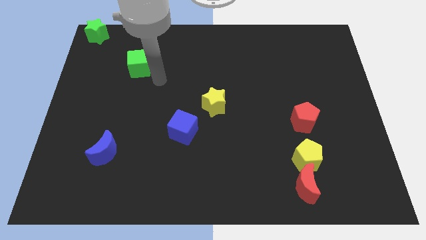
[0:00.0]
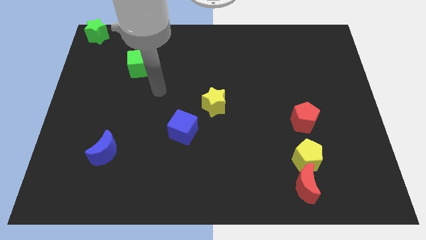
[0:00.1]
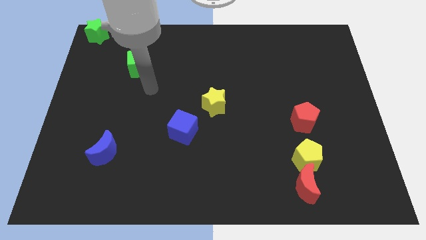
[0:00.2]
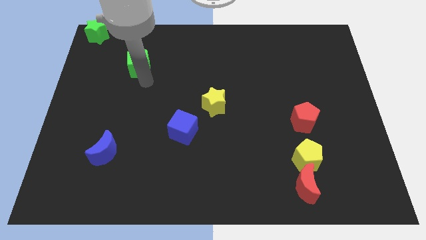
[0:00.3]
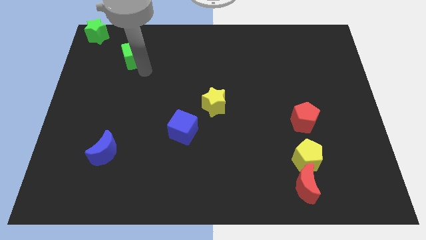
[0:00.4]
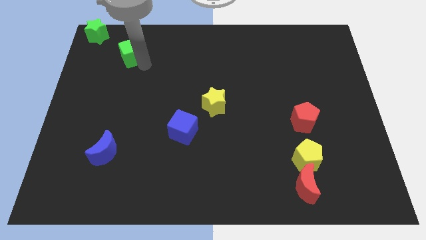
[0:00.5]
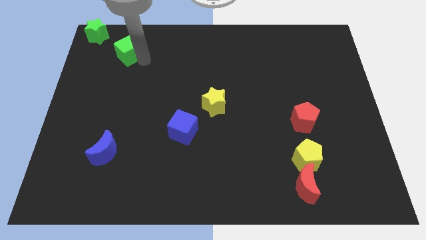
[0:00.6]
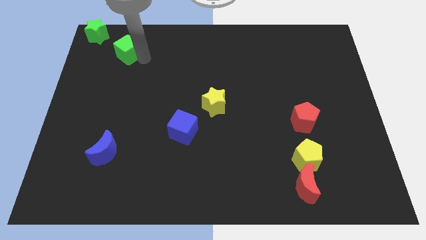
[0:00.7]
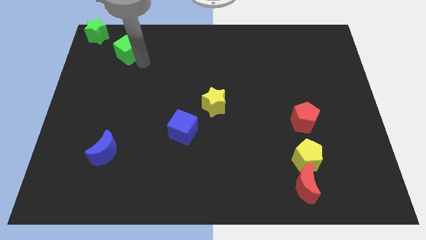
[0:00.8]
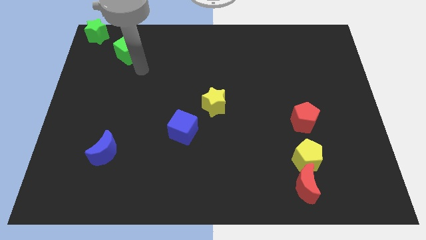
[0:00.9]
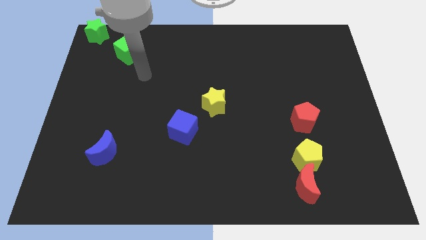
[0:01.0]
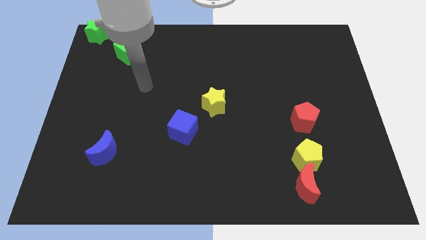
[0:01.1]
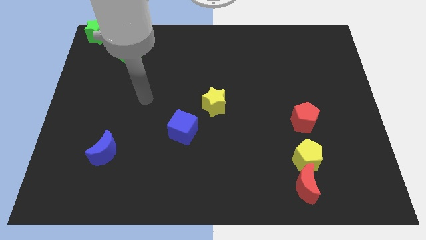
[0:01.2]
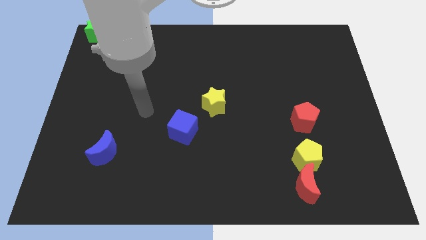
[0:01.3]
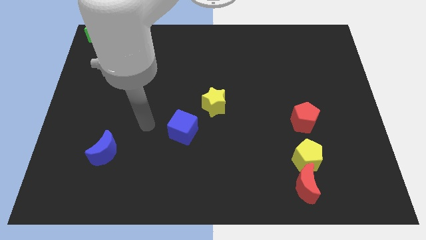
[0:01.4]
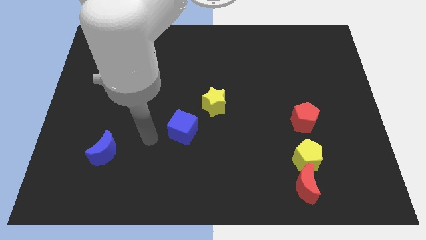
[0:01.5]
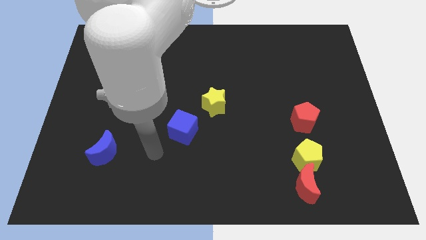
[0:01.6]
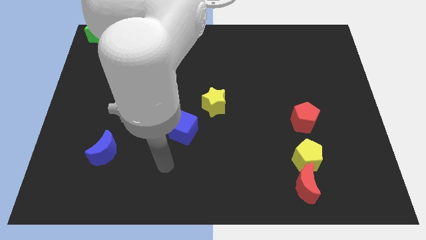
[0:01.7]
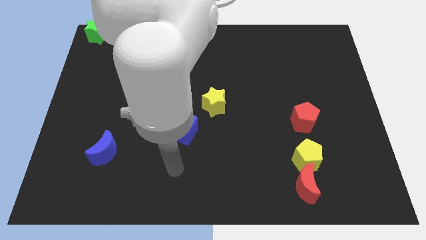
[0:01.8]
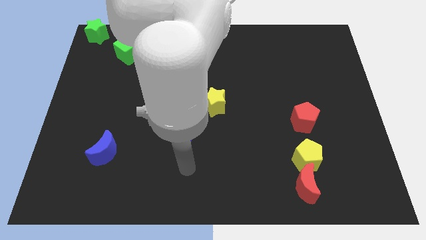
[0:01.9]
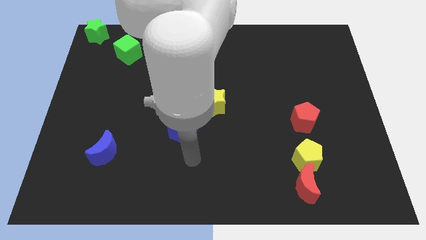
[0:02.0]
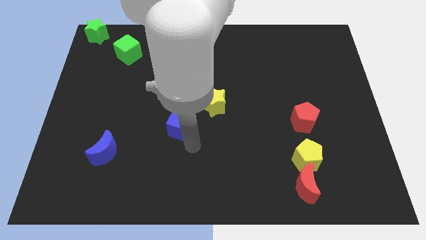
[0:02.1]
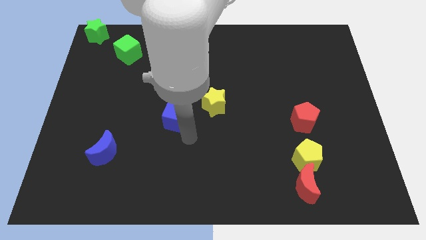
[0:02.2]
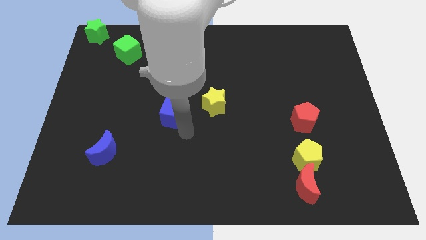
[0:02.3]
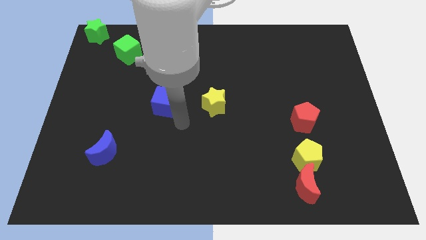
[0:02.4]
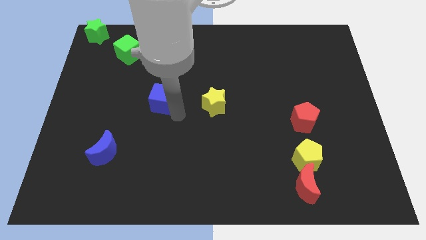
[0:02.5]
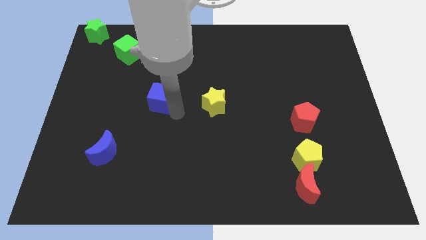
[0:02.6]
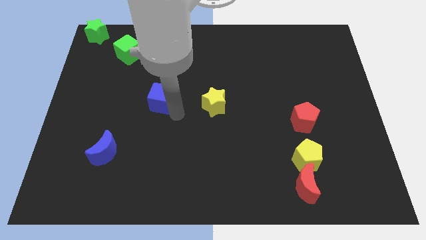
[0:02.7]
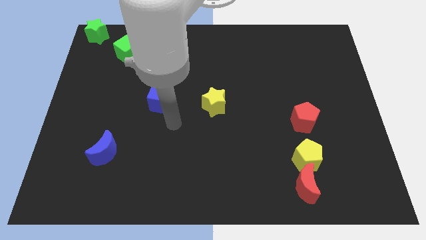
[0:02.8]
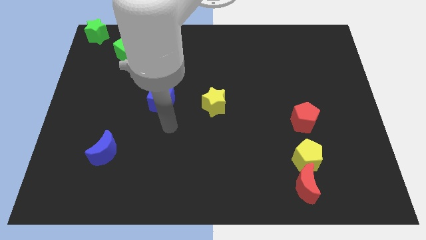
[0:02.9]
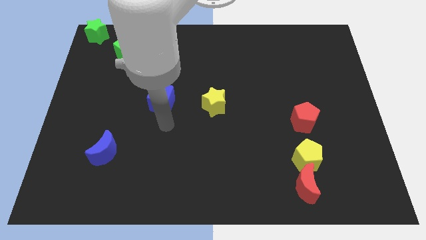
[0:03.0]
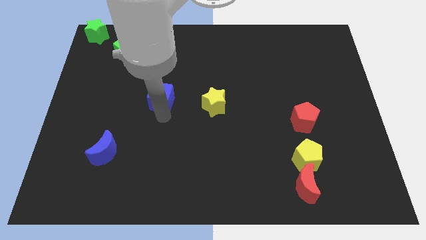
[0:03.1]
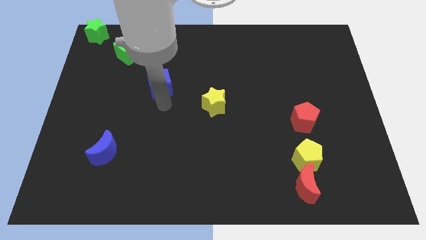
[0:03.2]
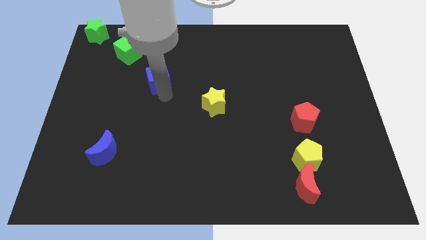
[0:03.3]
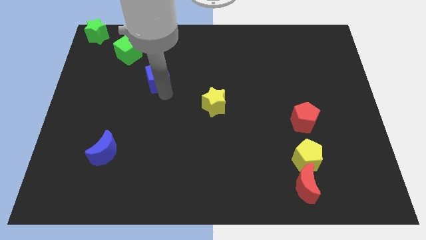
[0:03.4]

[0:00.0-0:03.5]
move the blue cube towards the green cube

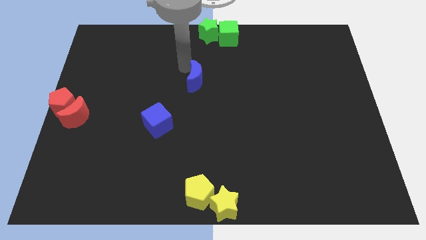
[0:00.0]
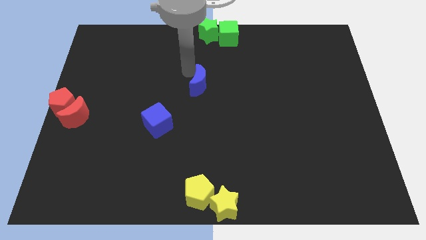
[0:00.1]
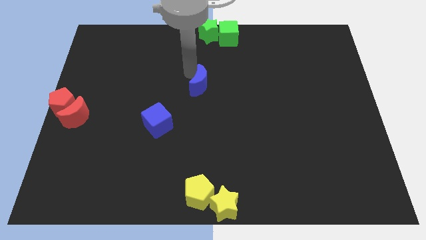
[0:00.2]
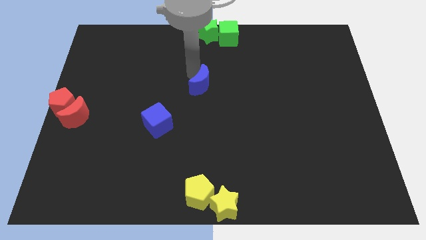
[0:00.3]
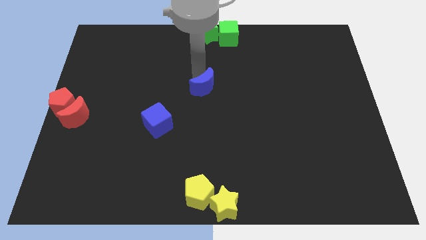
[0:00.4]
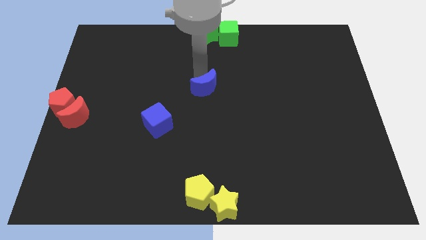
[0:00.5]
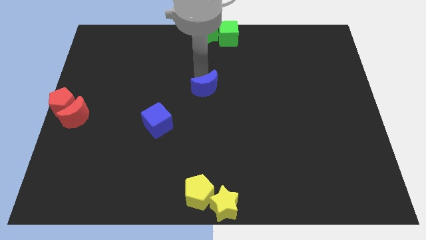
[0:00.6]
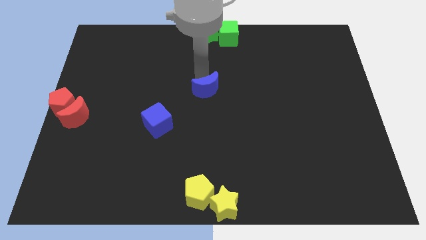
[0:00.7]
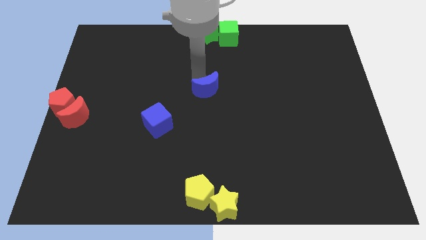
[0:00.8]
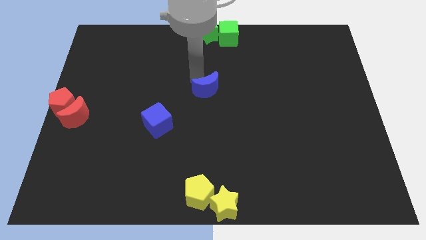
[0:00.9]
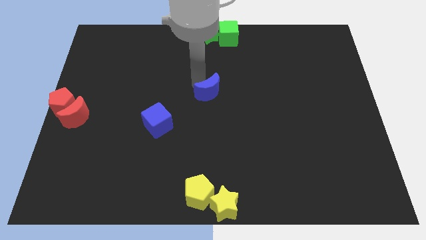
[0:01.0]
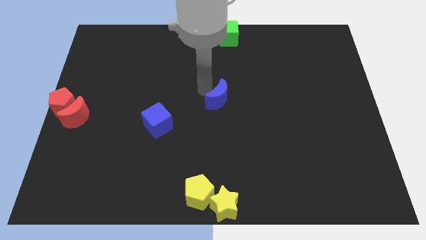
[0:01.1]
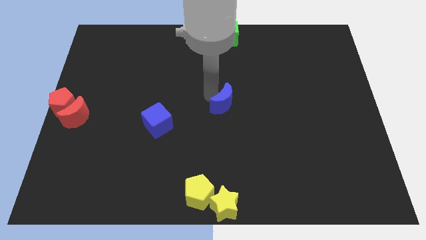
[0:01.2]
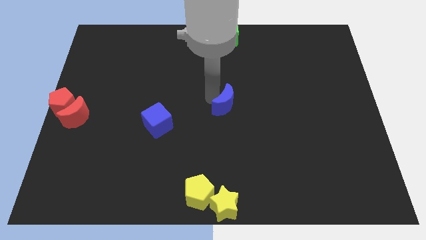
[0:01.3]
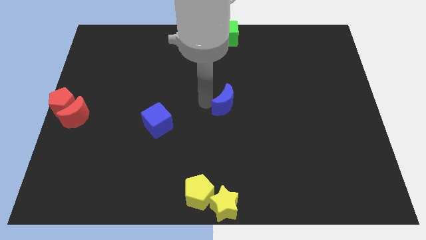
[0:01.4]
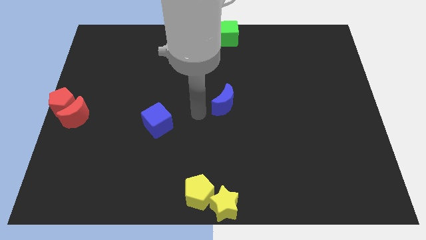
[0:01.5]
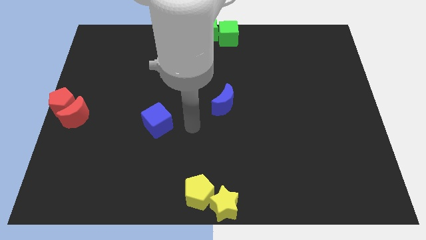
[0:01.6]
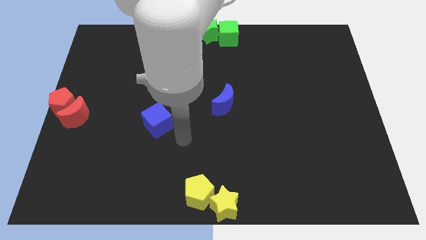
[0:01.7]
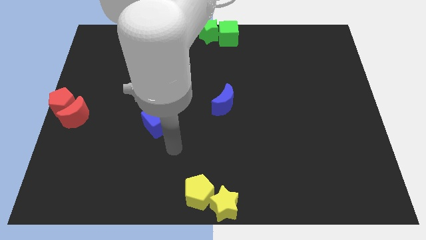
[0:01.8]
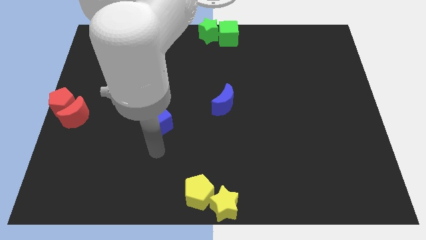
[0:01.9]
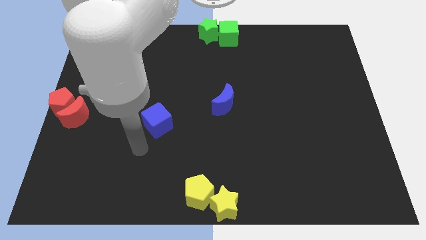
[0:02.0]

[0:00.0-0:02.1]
place the blue moon at the center of the board

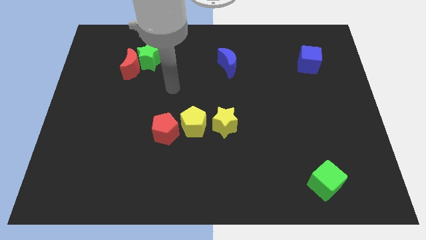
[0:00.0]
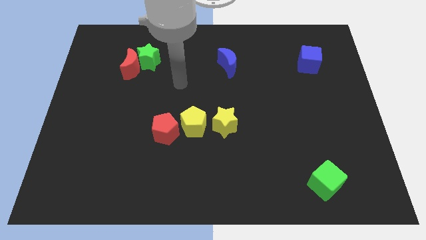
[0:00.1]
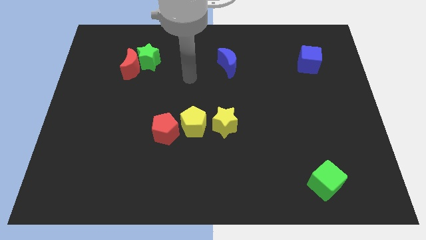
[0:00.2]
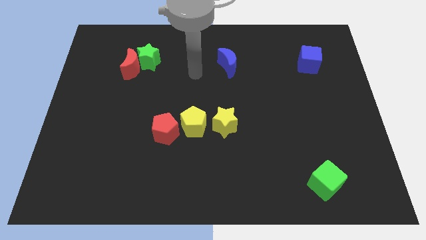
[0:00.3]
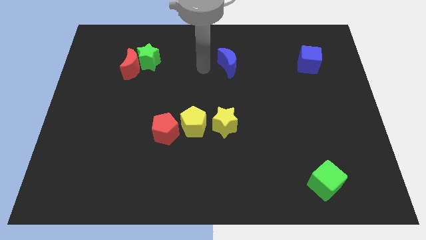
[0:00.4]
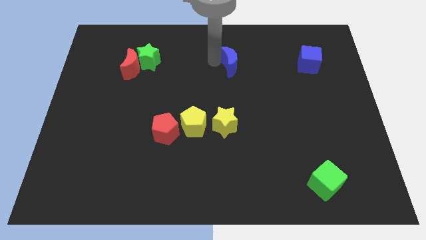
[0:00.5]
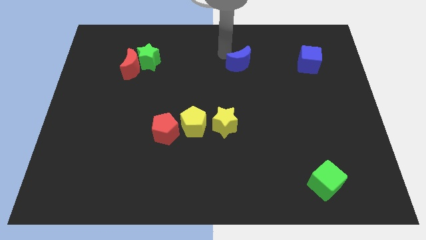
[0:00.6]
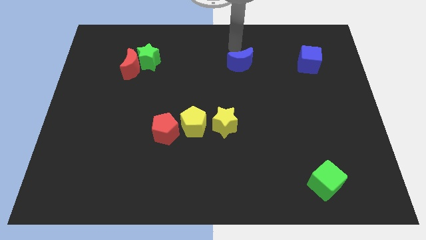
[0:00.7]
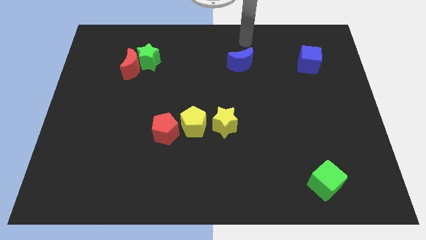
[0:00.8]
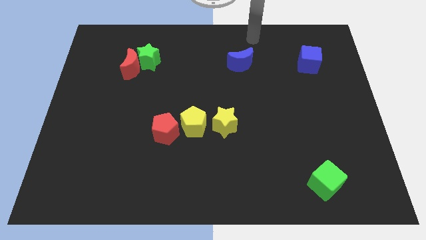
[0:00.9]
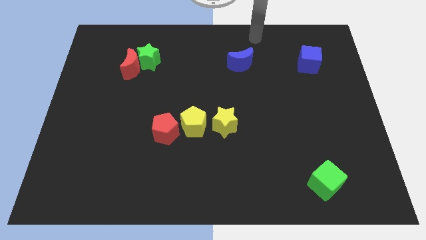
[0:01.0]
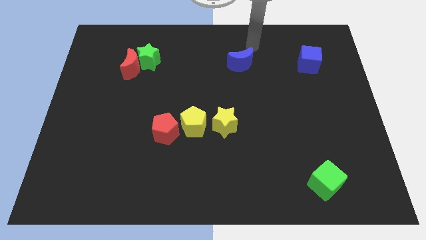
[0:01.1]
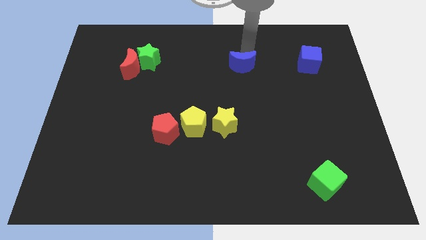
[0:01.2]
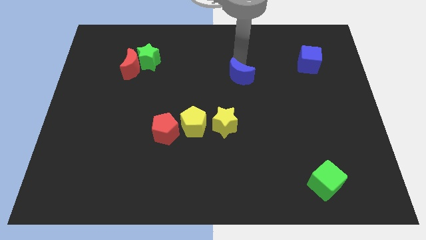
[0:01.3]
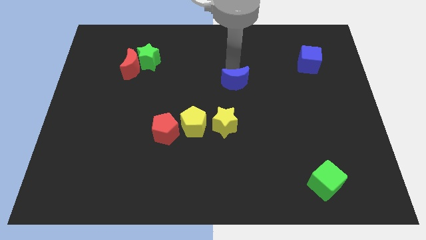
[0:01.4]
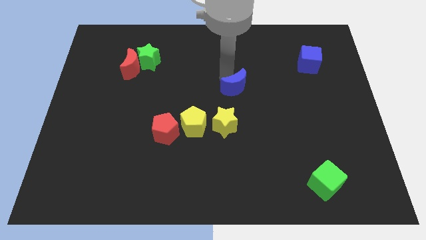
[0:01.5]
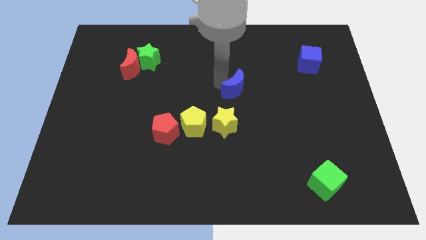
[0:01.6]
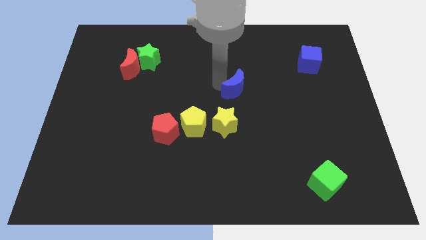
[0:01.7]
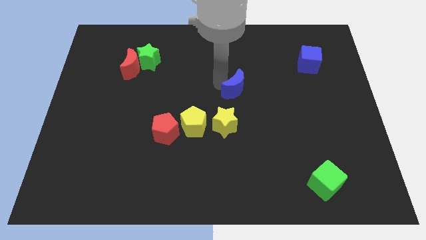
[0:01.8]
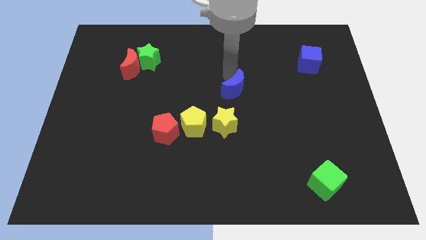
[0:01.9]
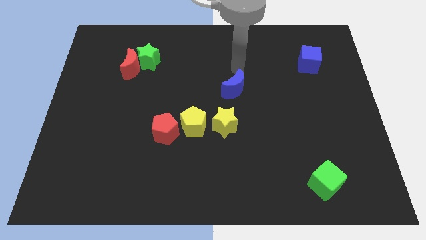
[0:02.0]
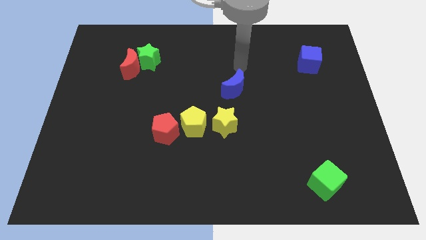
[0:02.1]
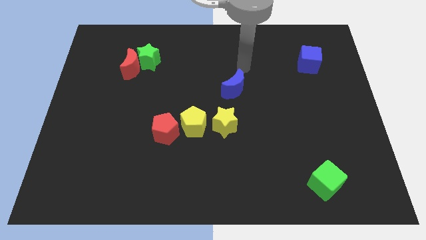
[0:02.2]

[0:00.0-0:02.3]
move blue crescent towards the yellow star

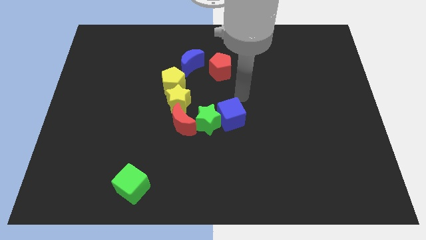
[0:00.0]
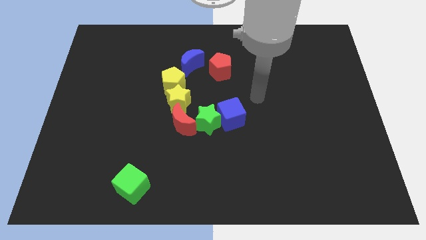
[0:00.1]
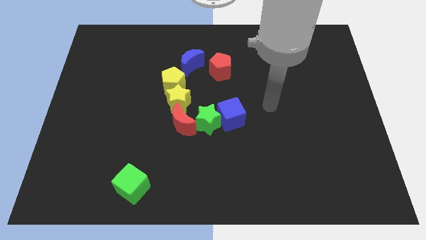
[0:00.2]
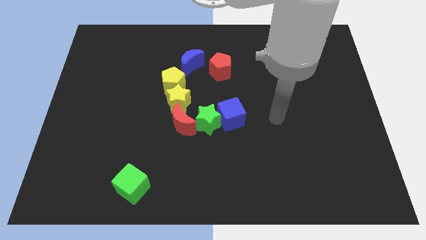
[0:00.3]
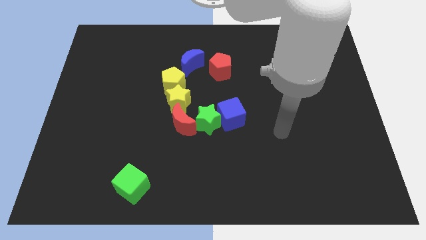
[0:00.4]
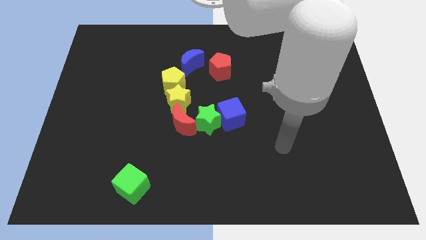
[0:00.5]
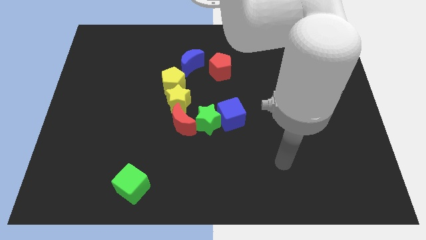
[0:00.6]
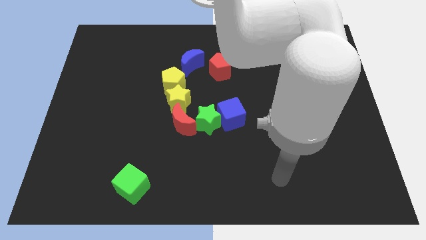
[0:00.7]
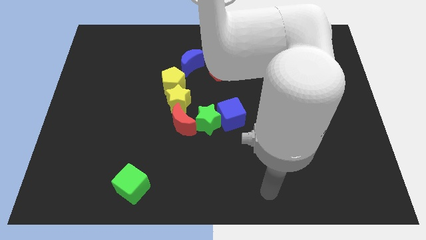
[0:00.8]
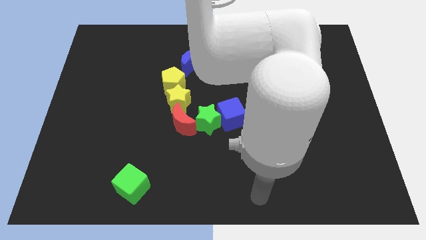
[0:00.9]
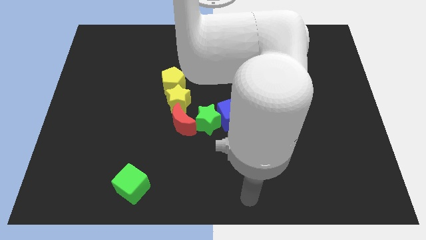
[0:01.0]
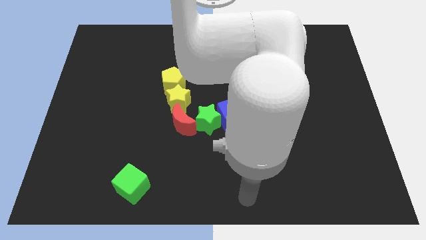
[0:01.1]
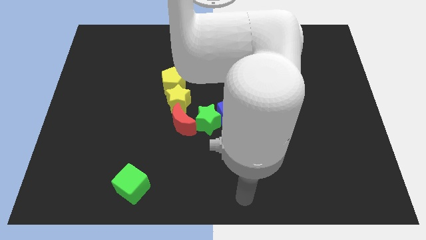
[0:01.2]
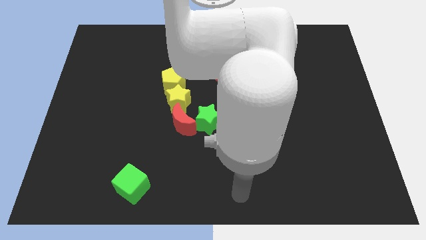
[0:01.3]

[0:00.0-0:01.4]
move your hand away from the blue cube
